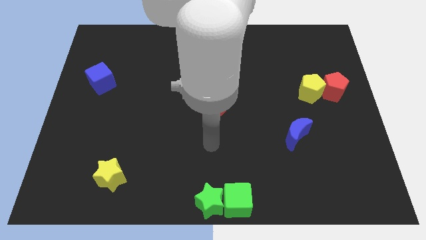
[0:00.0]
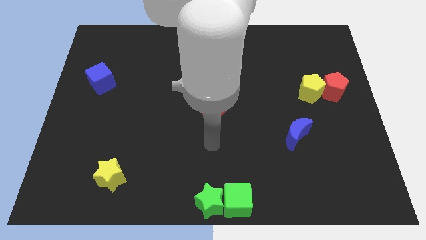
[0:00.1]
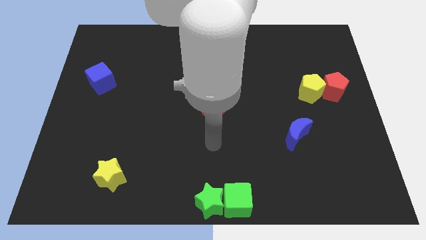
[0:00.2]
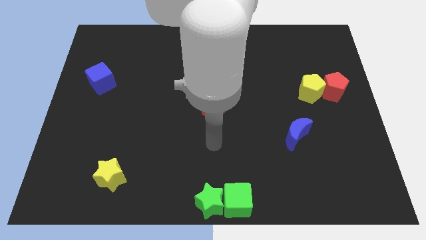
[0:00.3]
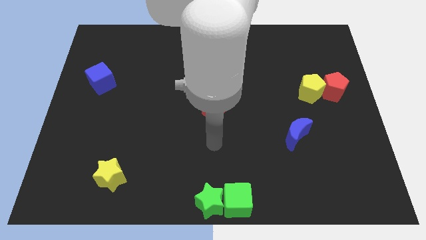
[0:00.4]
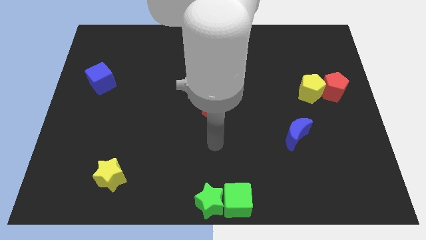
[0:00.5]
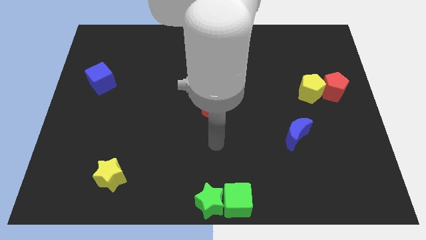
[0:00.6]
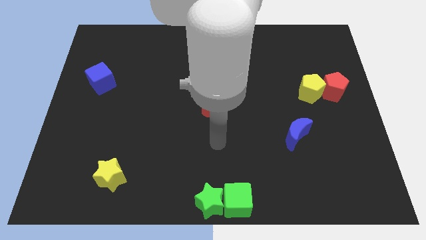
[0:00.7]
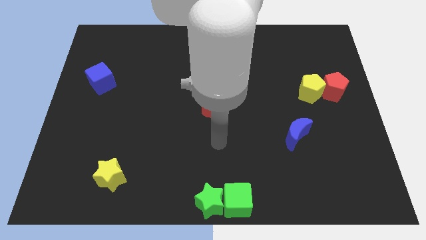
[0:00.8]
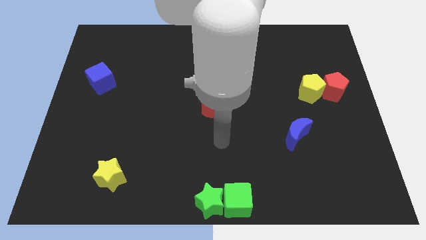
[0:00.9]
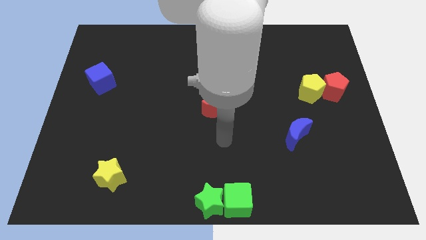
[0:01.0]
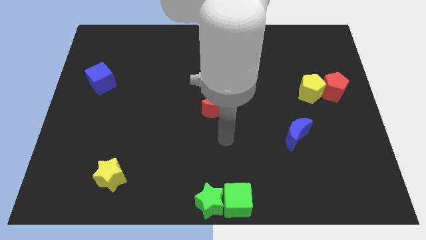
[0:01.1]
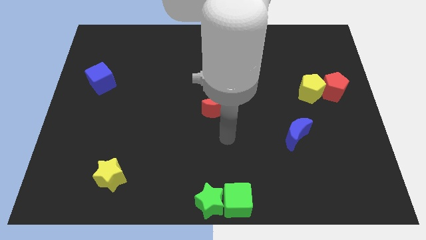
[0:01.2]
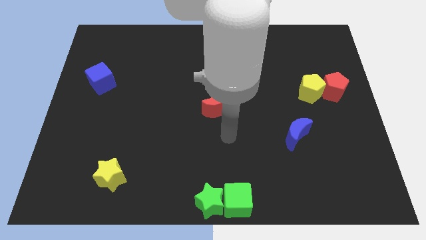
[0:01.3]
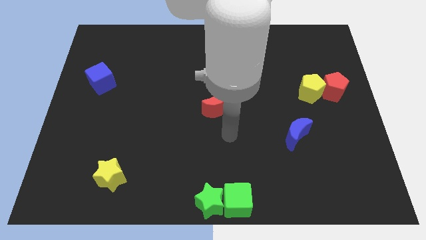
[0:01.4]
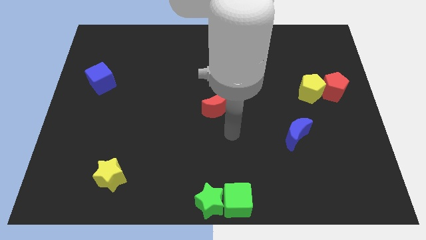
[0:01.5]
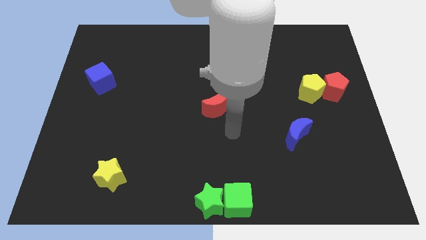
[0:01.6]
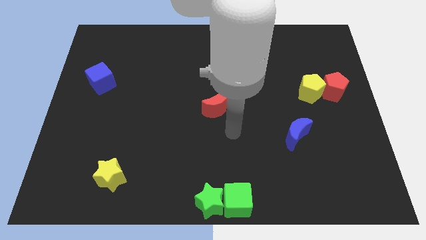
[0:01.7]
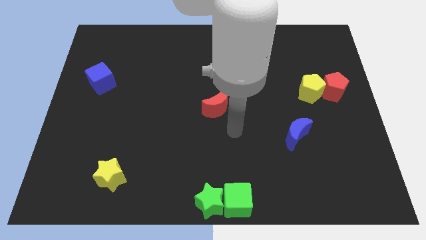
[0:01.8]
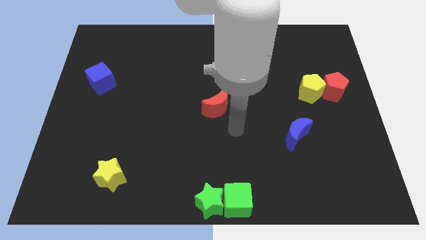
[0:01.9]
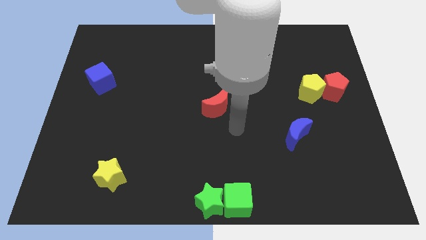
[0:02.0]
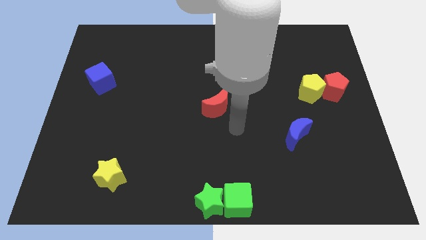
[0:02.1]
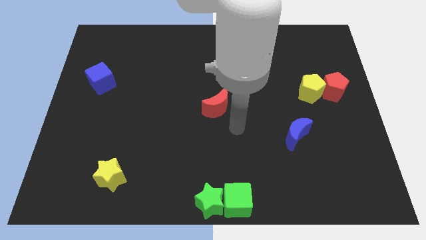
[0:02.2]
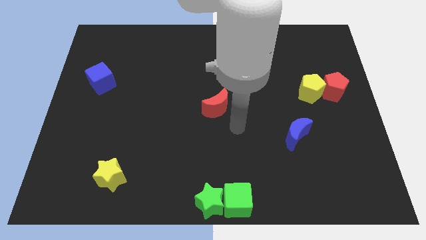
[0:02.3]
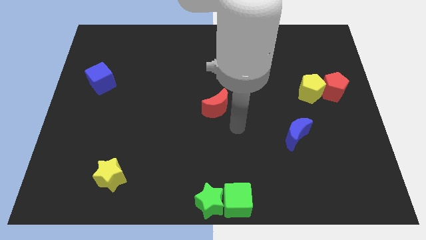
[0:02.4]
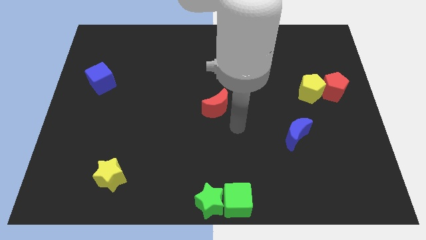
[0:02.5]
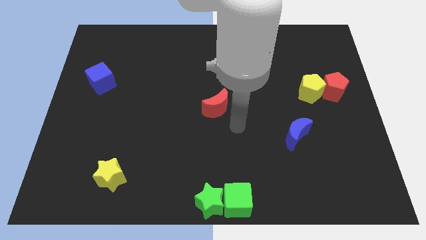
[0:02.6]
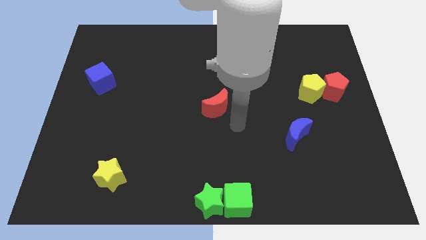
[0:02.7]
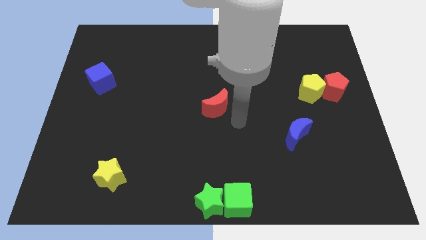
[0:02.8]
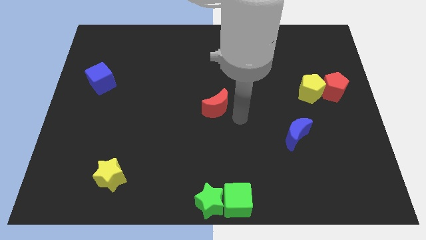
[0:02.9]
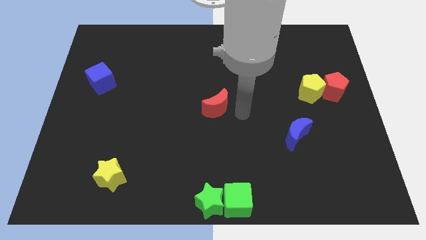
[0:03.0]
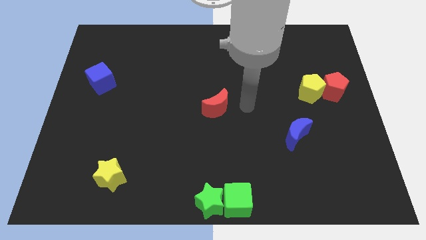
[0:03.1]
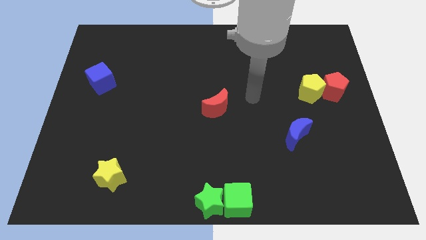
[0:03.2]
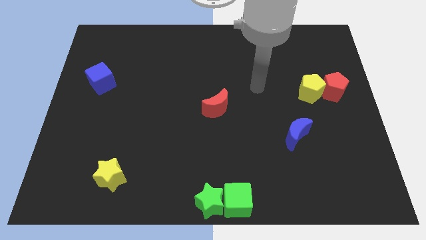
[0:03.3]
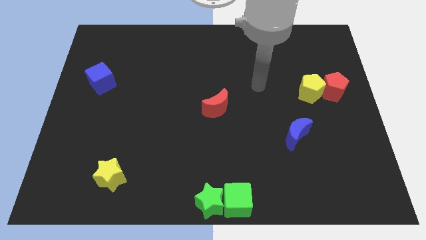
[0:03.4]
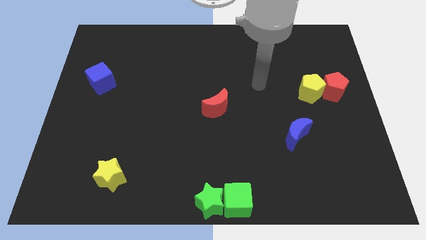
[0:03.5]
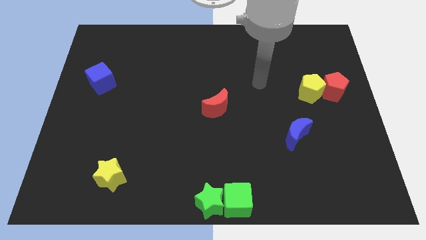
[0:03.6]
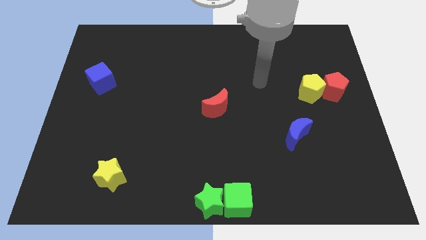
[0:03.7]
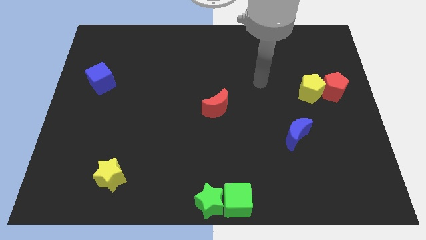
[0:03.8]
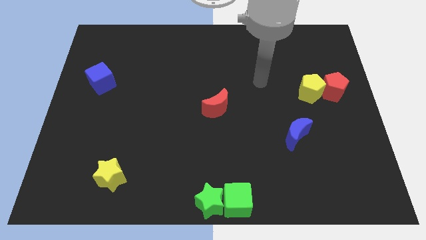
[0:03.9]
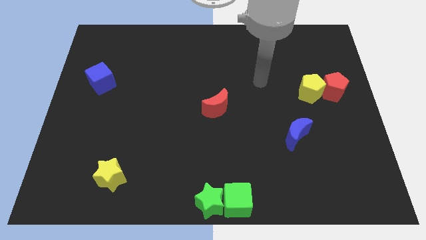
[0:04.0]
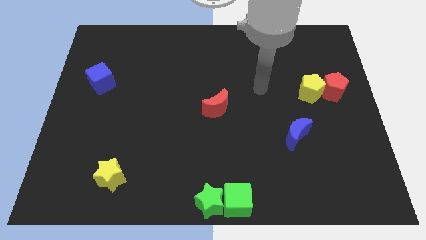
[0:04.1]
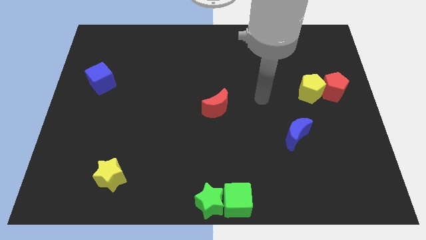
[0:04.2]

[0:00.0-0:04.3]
place your arm left to the yellow pentagon

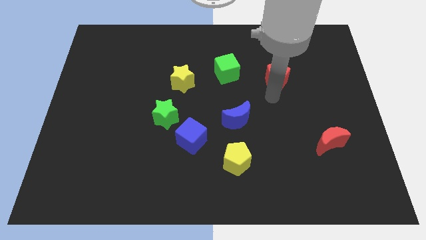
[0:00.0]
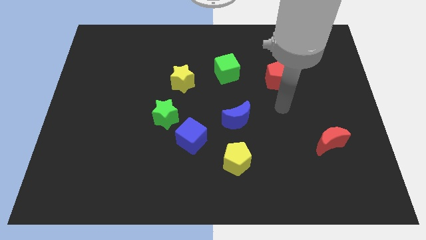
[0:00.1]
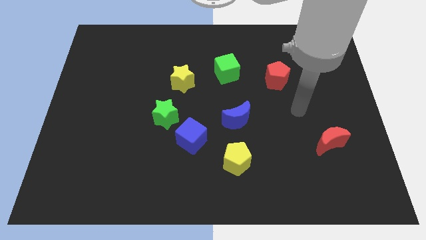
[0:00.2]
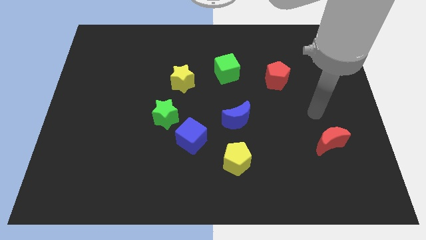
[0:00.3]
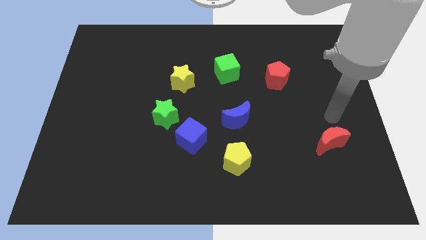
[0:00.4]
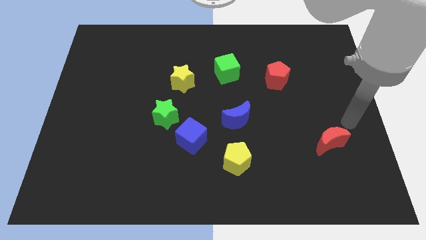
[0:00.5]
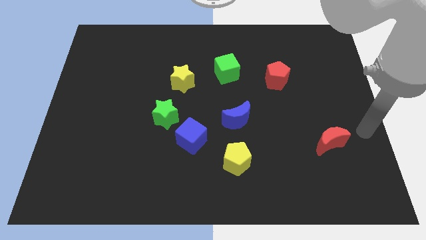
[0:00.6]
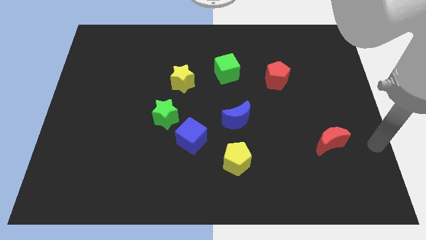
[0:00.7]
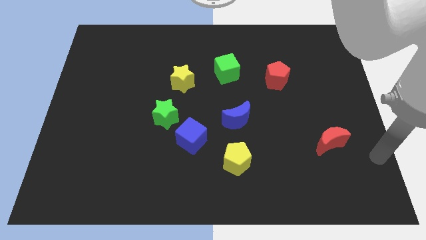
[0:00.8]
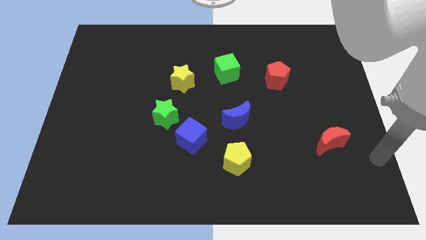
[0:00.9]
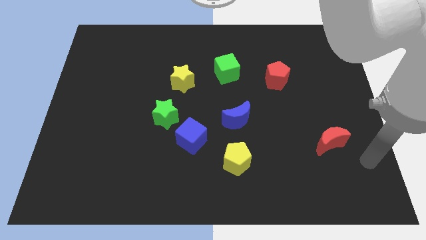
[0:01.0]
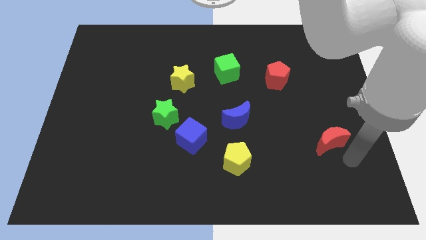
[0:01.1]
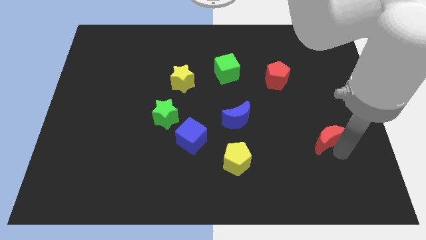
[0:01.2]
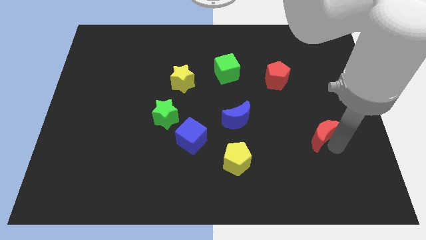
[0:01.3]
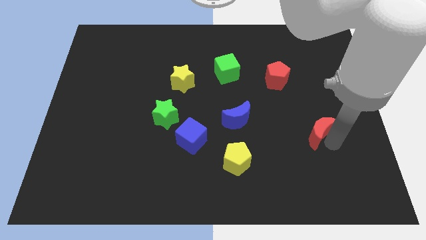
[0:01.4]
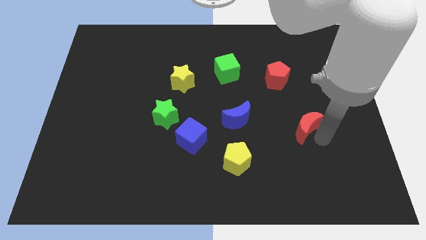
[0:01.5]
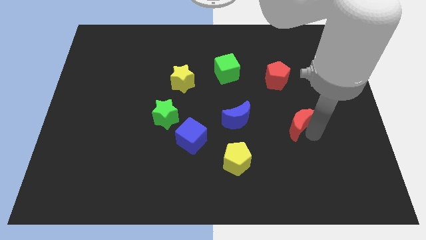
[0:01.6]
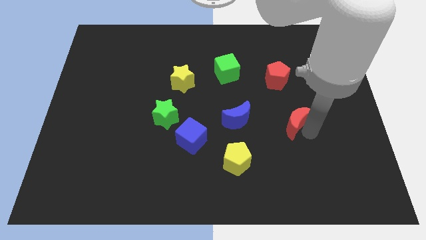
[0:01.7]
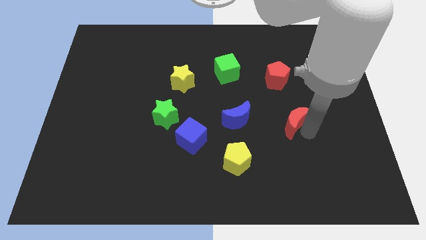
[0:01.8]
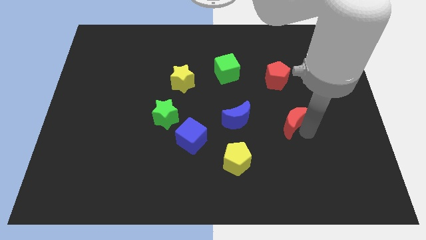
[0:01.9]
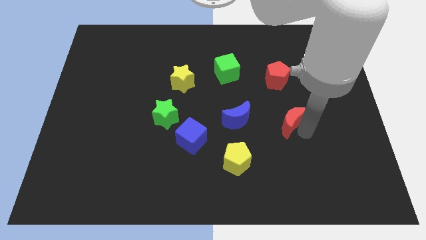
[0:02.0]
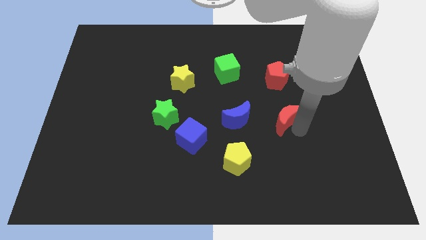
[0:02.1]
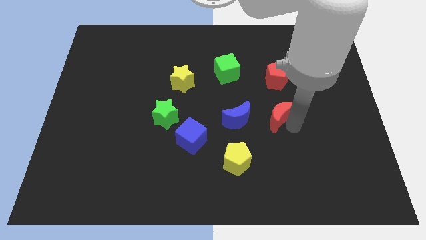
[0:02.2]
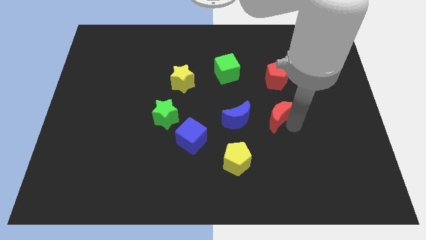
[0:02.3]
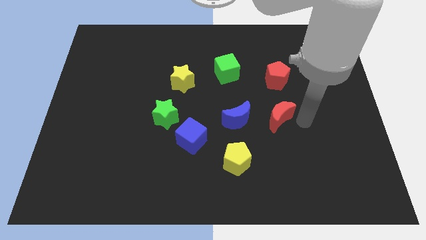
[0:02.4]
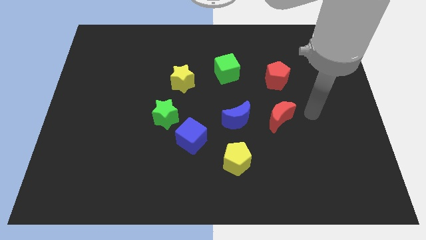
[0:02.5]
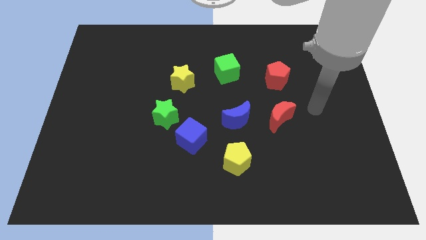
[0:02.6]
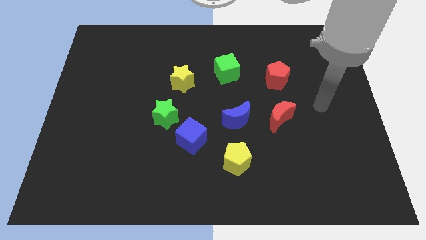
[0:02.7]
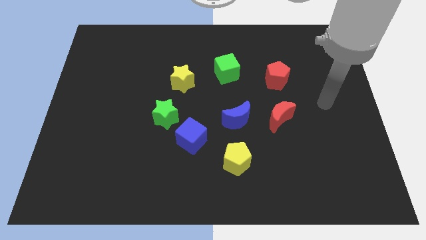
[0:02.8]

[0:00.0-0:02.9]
push the red crescent towards the blue crescent

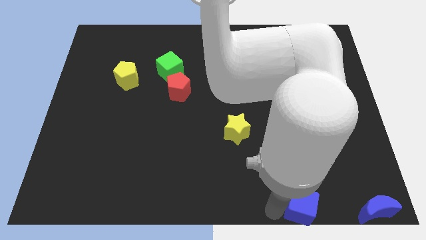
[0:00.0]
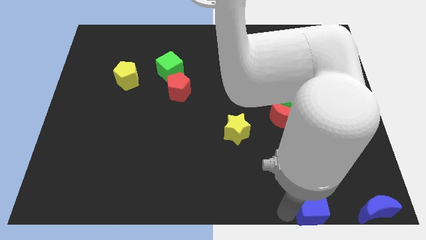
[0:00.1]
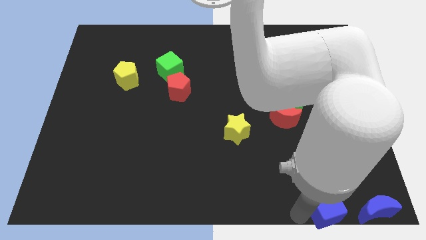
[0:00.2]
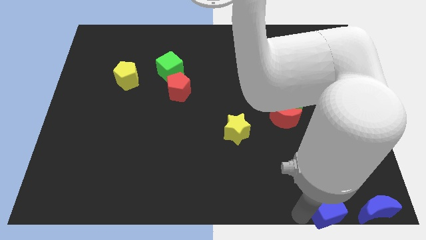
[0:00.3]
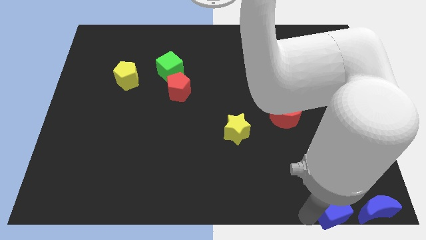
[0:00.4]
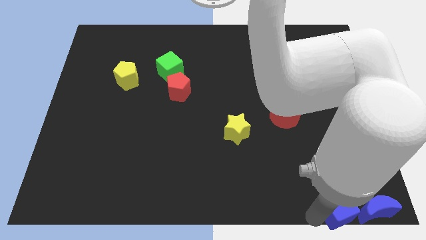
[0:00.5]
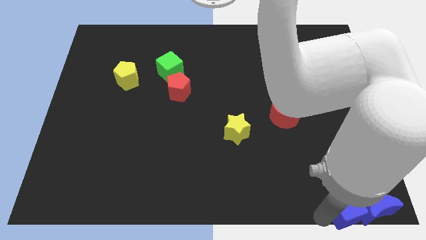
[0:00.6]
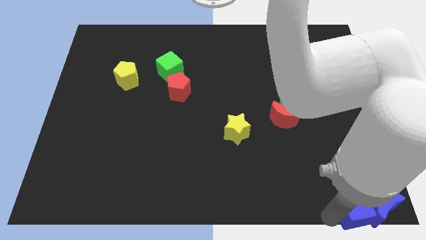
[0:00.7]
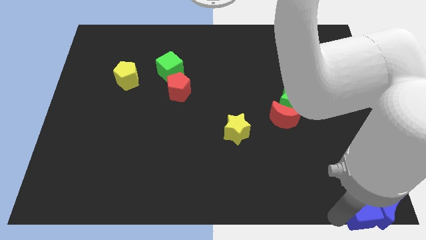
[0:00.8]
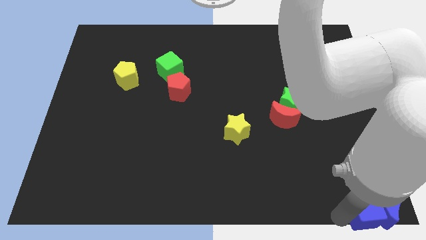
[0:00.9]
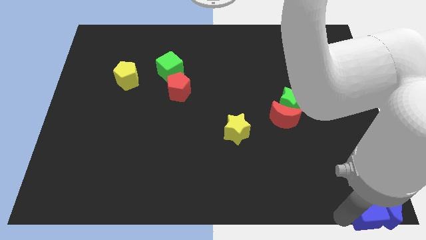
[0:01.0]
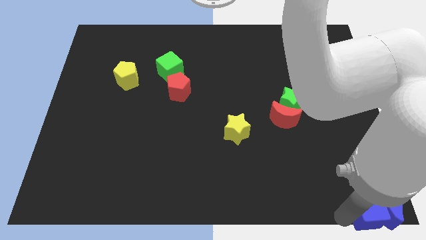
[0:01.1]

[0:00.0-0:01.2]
push the blue cube into the blue moon

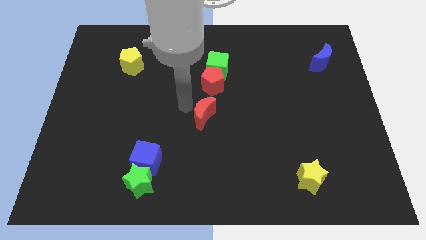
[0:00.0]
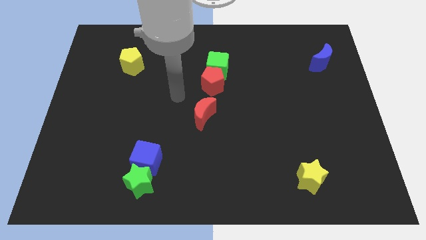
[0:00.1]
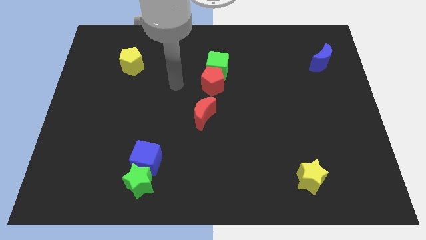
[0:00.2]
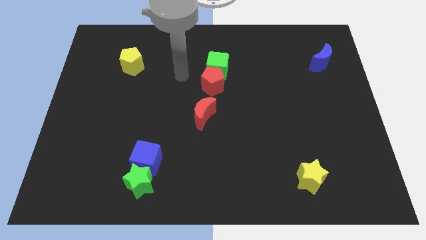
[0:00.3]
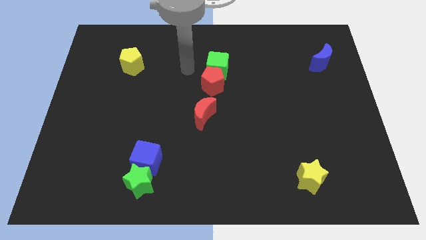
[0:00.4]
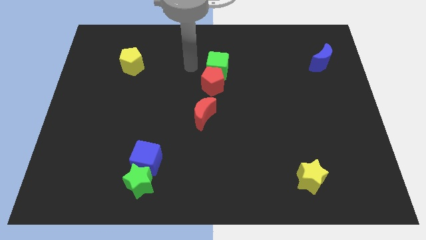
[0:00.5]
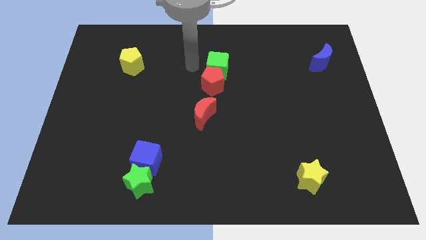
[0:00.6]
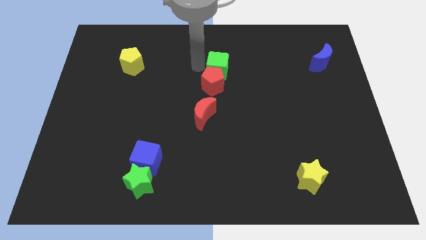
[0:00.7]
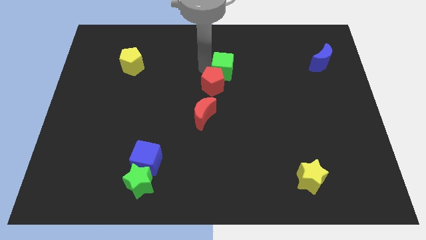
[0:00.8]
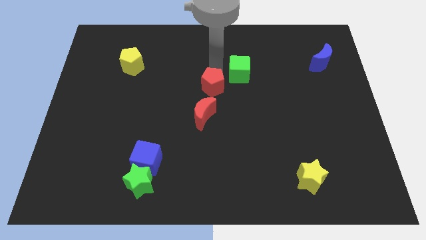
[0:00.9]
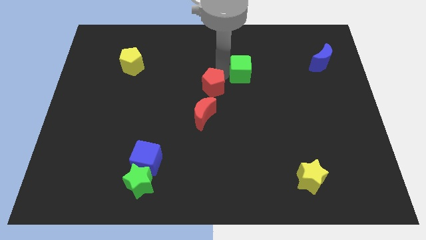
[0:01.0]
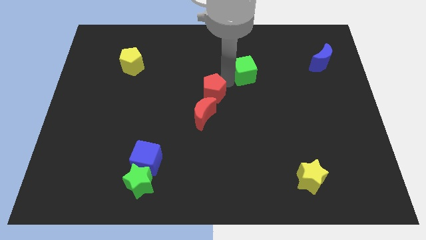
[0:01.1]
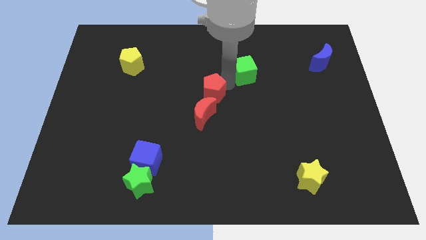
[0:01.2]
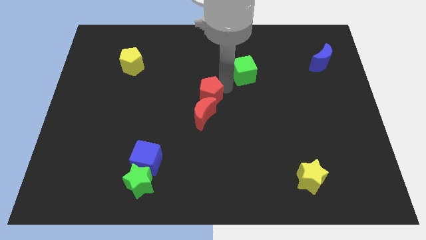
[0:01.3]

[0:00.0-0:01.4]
separate the green cube and red crescent
